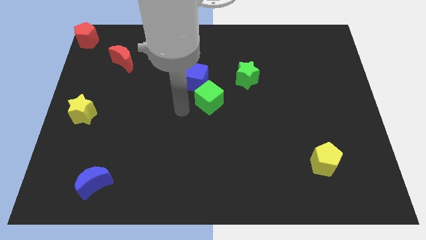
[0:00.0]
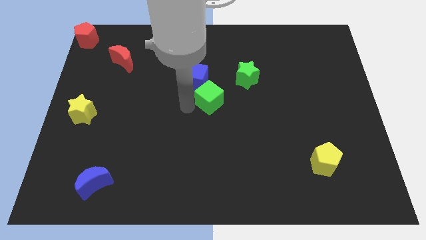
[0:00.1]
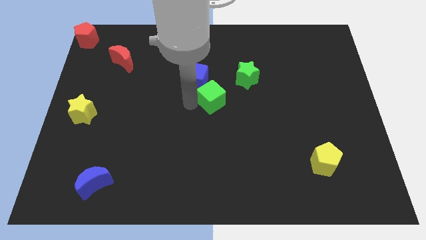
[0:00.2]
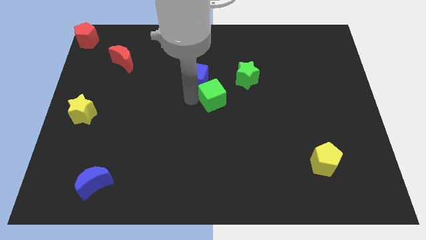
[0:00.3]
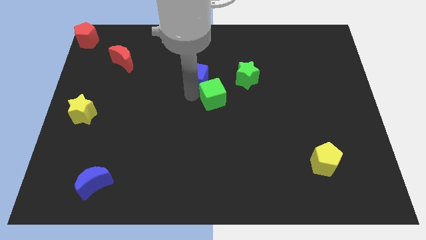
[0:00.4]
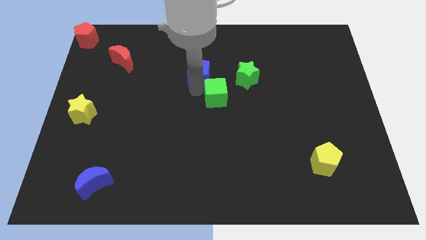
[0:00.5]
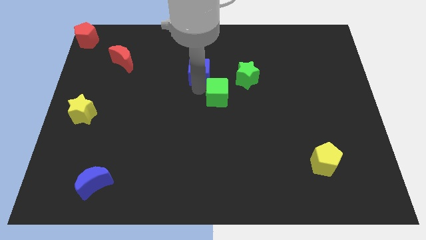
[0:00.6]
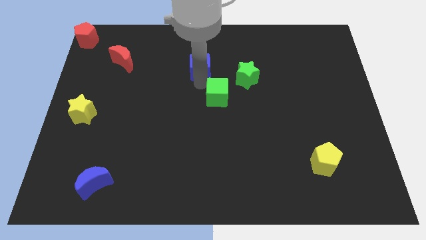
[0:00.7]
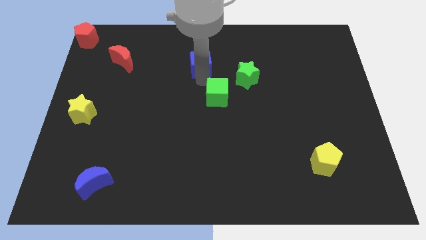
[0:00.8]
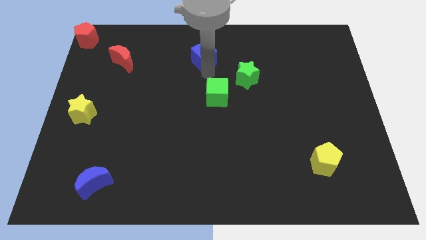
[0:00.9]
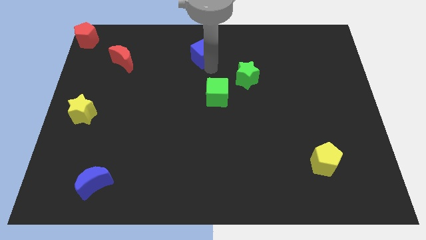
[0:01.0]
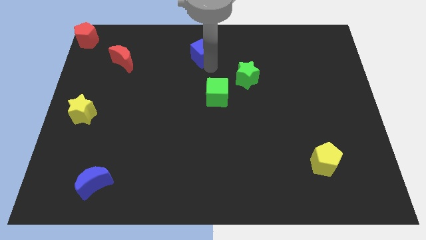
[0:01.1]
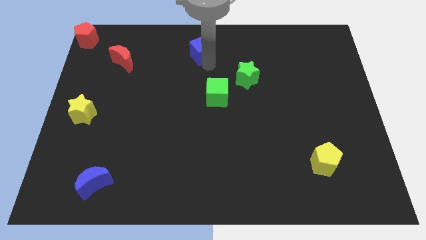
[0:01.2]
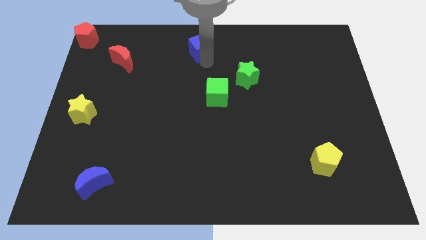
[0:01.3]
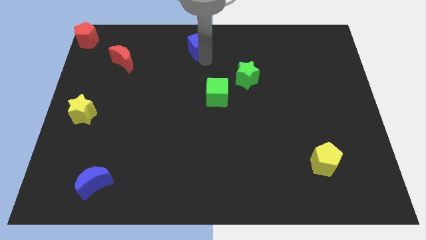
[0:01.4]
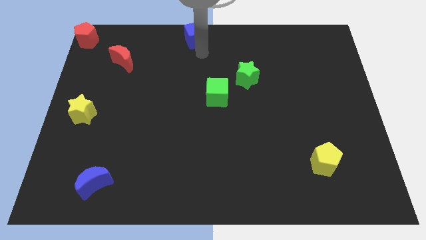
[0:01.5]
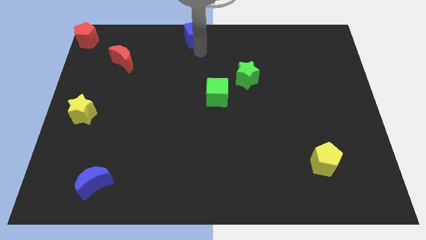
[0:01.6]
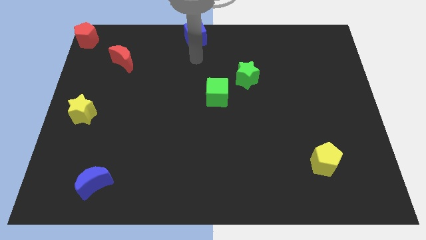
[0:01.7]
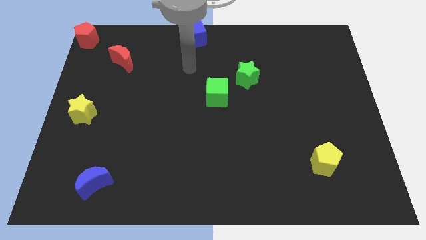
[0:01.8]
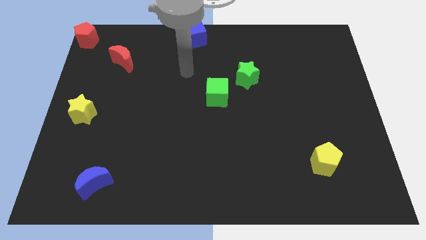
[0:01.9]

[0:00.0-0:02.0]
push the blue cube towards the top center of the board

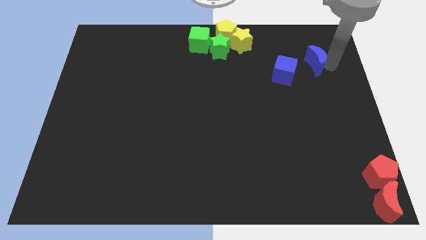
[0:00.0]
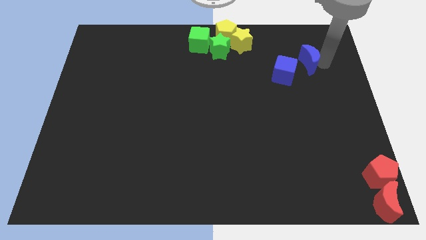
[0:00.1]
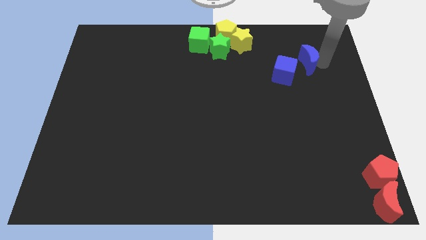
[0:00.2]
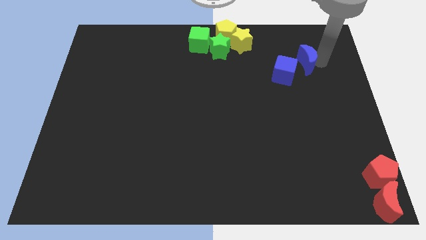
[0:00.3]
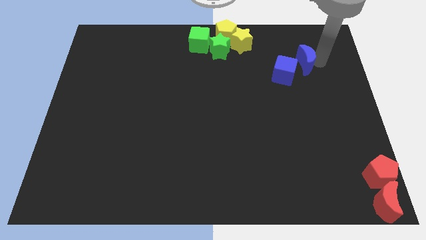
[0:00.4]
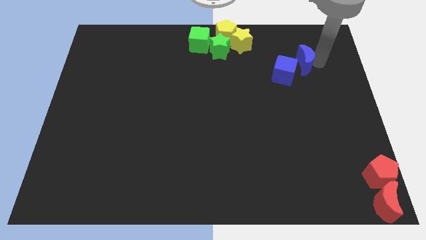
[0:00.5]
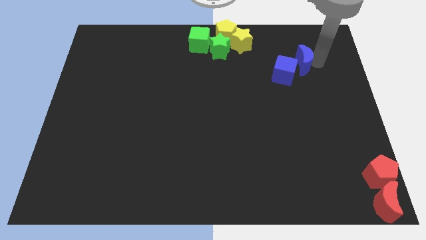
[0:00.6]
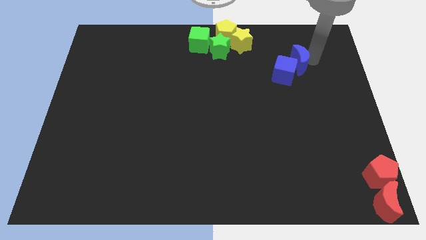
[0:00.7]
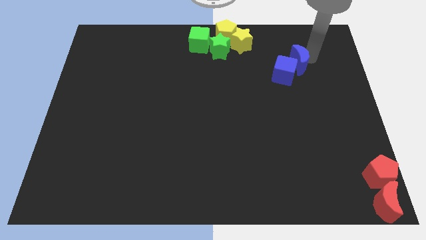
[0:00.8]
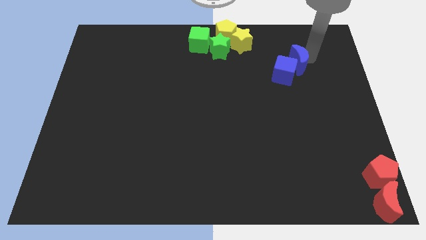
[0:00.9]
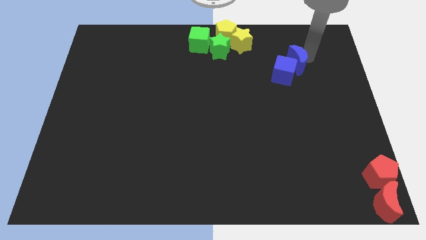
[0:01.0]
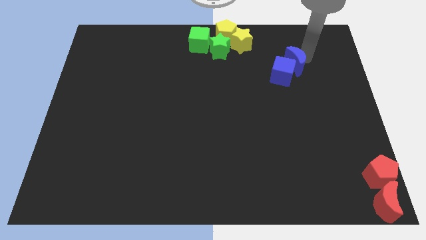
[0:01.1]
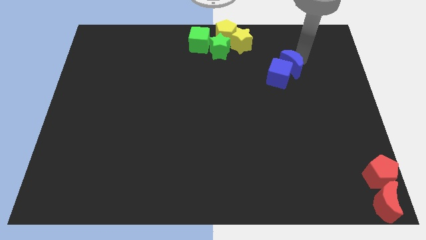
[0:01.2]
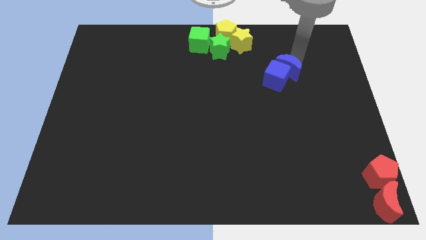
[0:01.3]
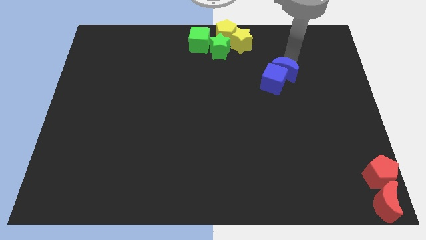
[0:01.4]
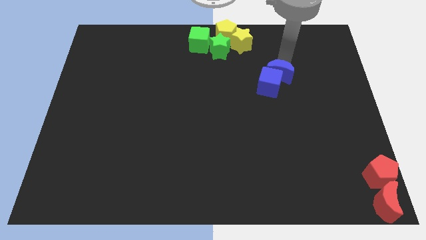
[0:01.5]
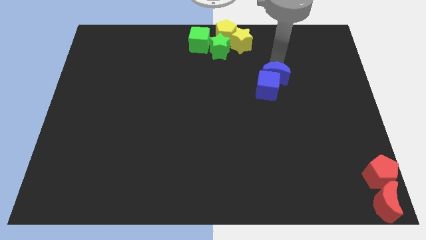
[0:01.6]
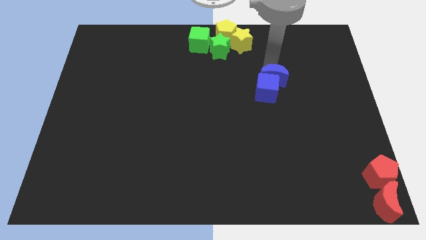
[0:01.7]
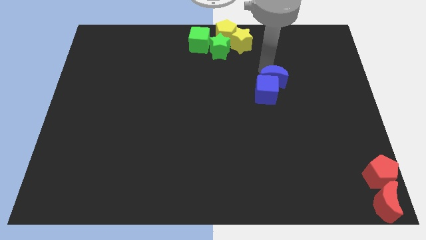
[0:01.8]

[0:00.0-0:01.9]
move blue crescent into the blue cube

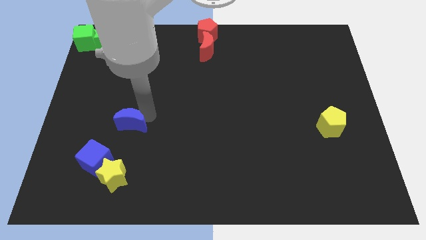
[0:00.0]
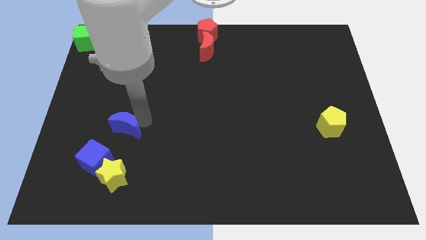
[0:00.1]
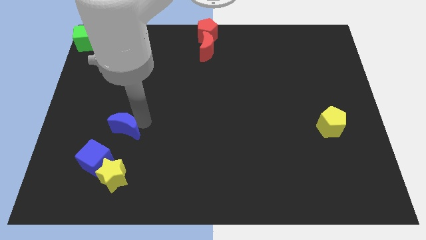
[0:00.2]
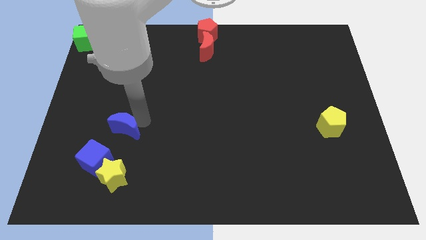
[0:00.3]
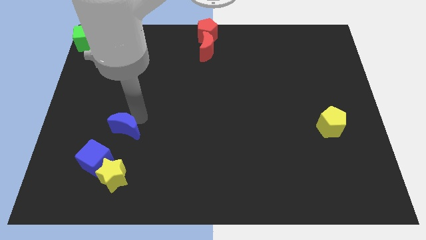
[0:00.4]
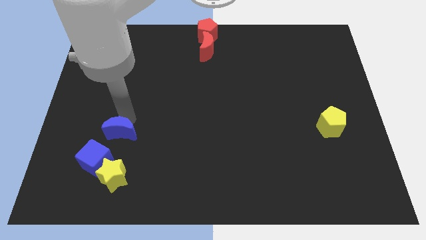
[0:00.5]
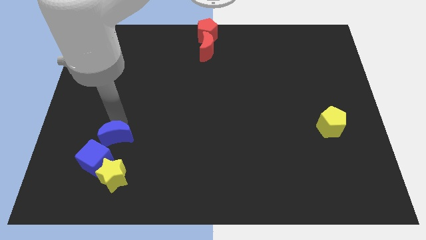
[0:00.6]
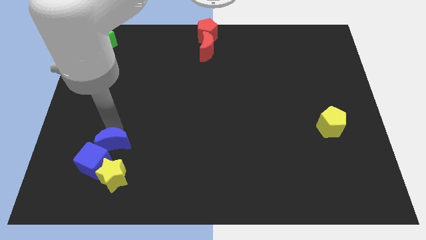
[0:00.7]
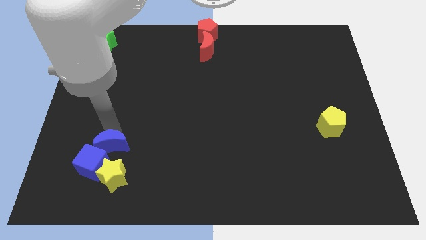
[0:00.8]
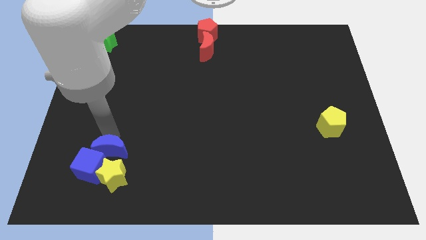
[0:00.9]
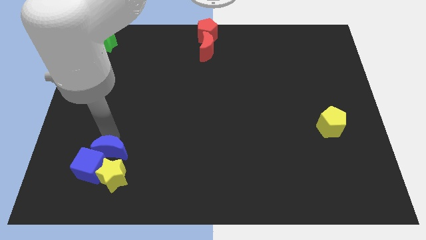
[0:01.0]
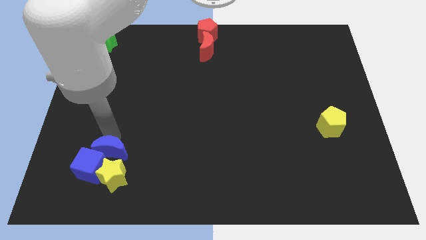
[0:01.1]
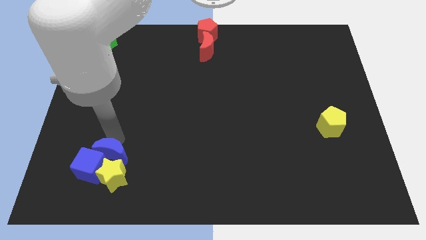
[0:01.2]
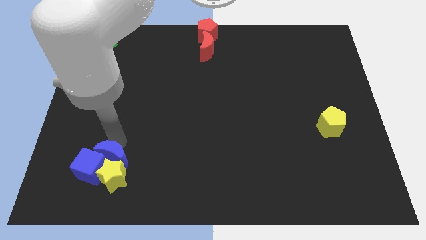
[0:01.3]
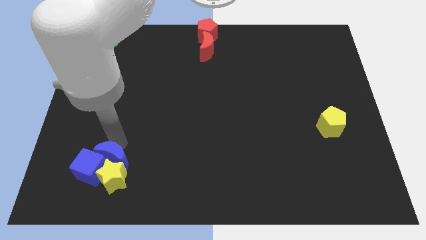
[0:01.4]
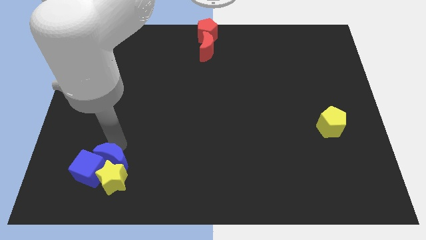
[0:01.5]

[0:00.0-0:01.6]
push blue blocks into blue cube

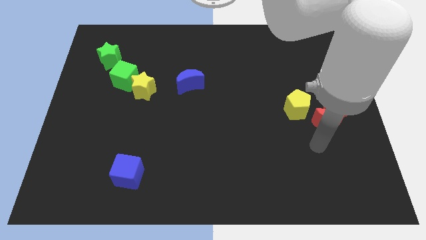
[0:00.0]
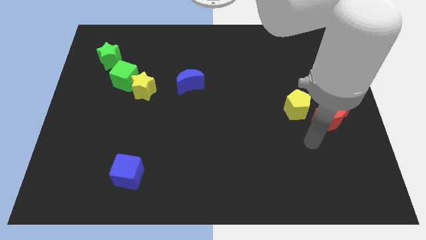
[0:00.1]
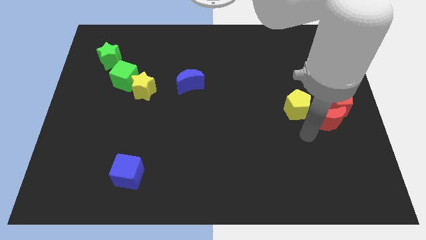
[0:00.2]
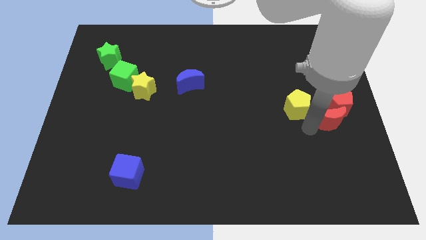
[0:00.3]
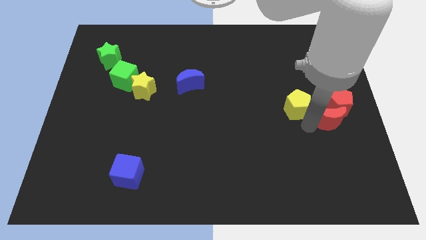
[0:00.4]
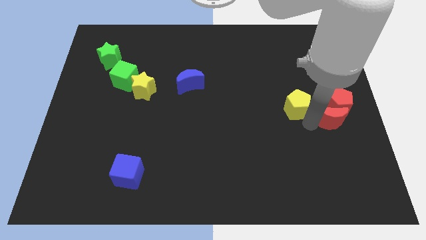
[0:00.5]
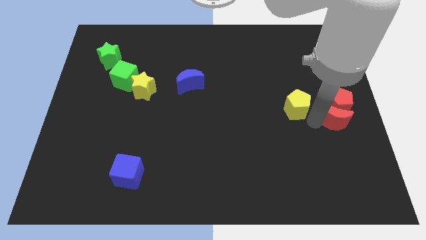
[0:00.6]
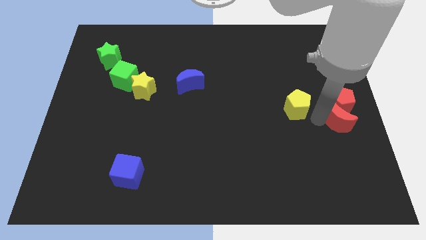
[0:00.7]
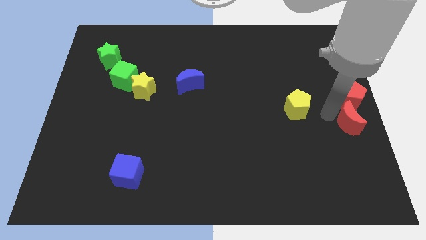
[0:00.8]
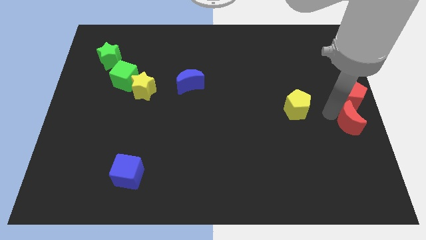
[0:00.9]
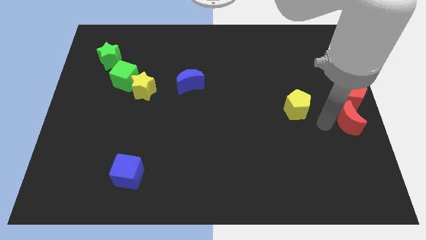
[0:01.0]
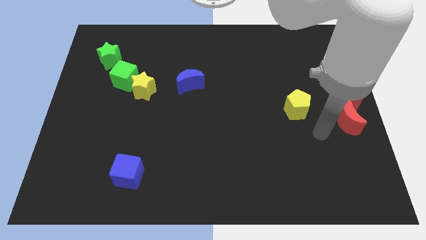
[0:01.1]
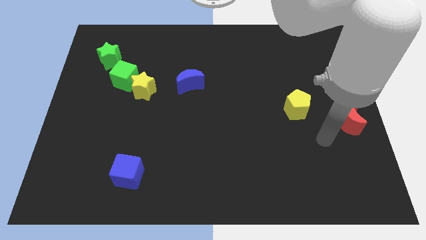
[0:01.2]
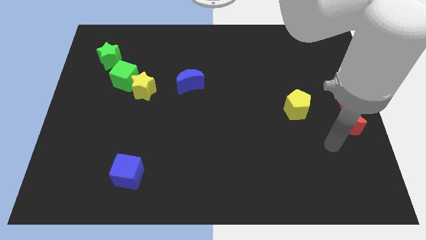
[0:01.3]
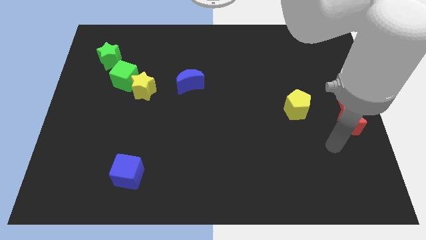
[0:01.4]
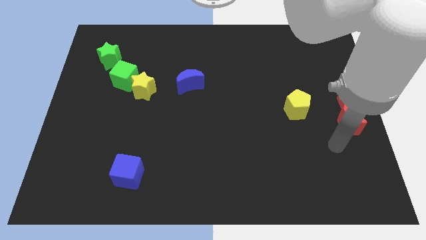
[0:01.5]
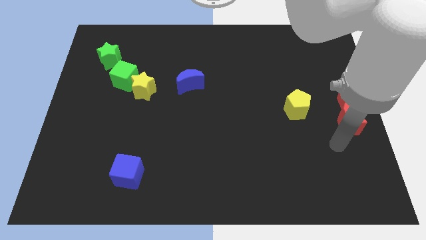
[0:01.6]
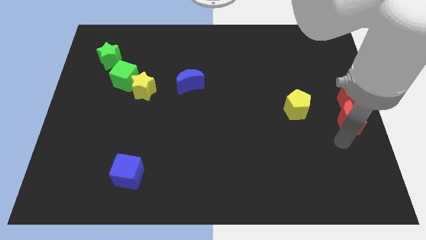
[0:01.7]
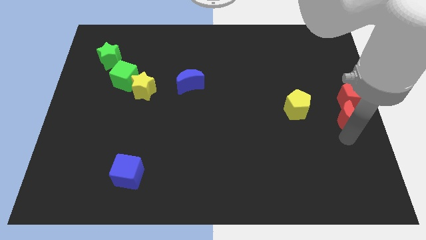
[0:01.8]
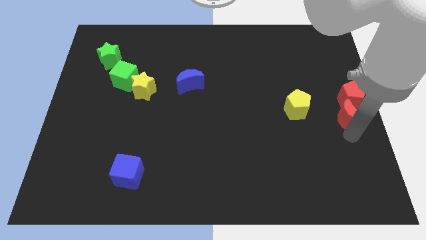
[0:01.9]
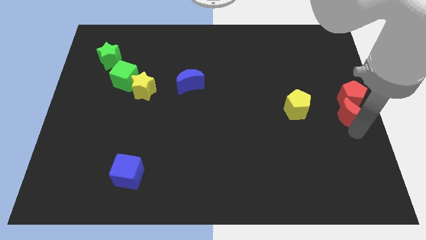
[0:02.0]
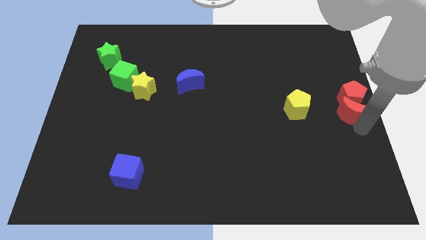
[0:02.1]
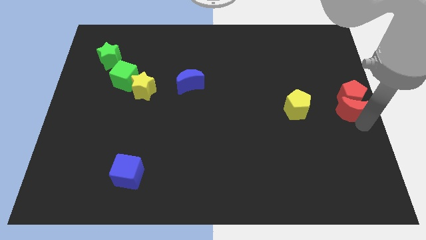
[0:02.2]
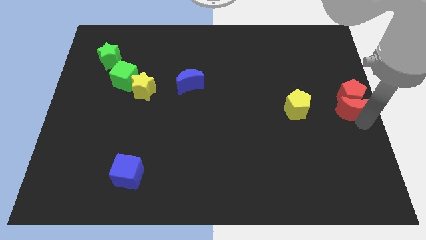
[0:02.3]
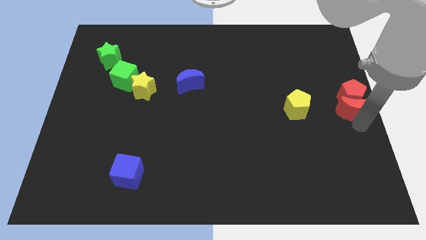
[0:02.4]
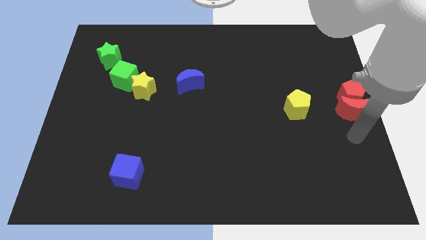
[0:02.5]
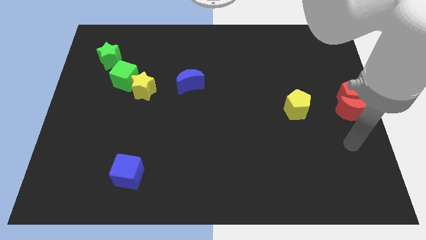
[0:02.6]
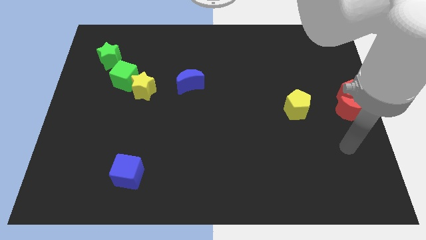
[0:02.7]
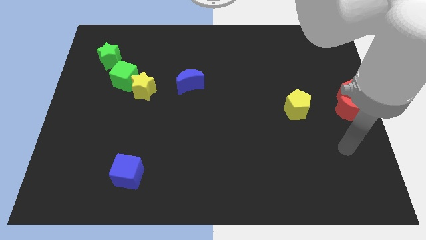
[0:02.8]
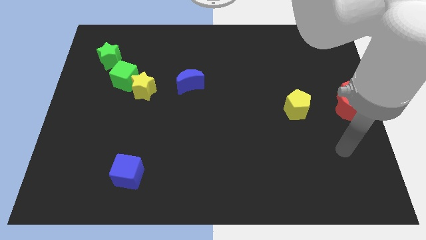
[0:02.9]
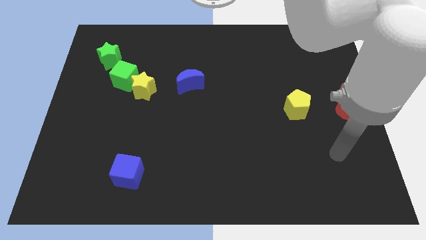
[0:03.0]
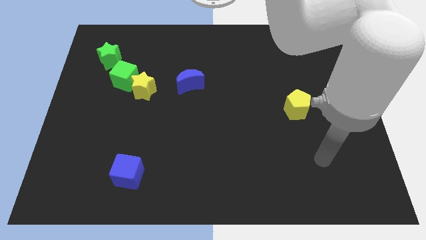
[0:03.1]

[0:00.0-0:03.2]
push the red moon along with the red pentagon to the right centre of the board

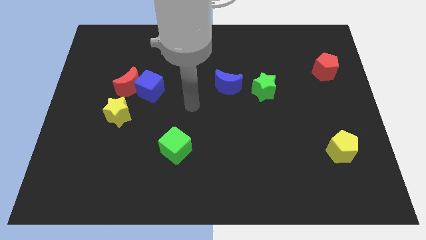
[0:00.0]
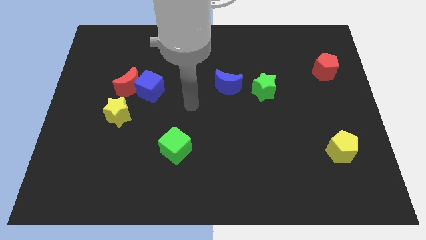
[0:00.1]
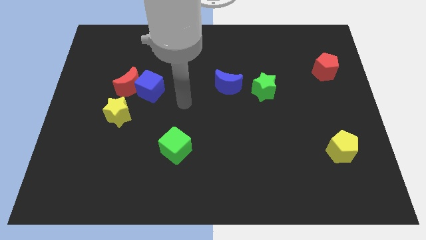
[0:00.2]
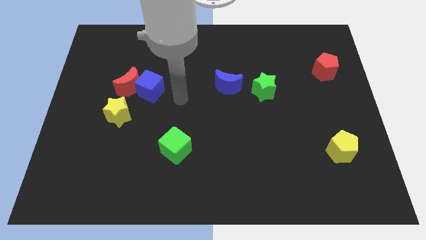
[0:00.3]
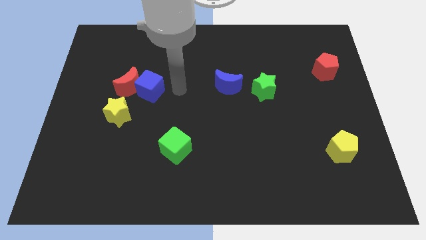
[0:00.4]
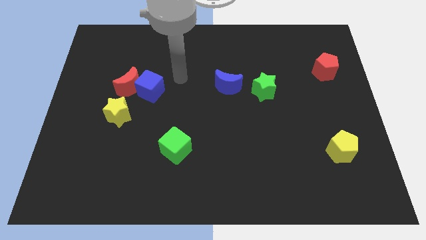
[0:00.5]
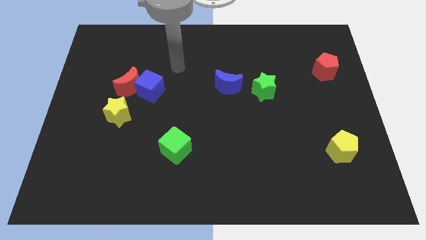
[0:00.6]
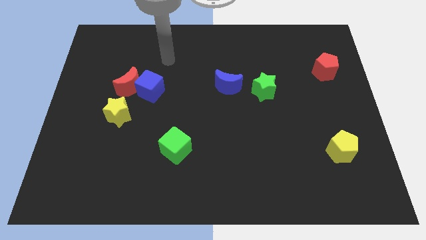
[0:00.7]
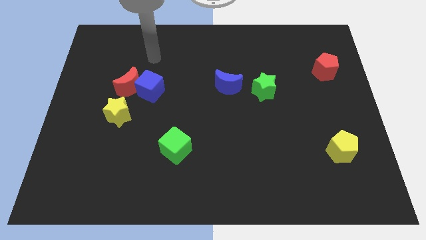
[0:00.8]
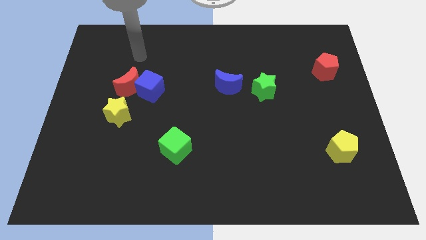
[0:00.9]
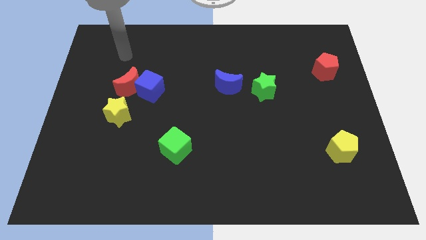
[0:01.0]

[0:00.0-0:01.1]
point your arm at the top side of the red moon
